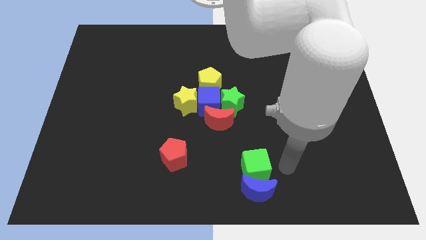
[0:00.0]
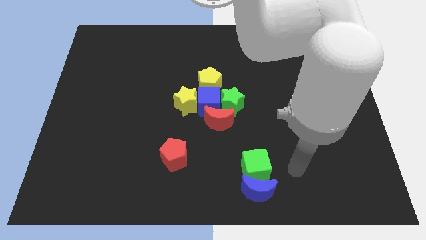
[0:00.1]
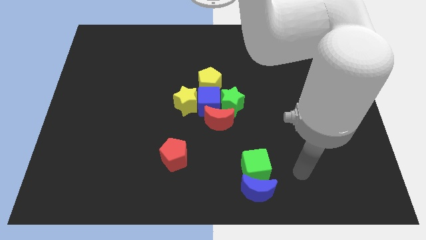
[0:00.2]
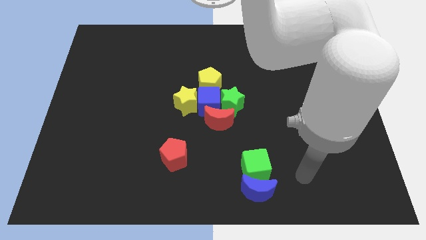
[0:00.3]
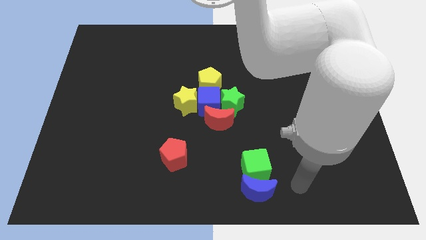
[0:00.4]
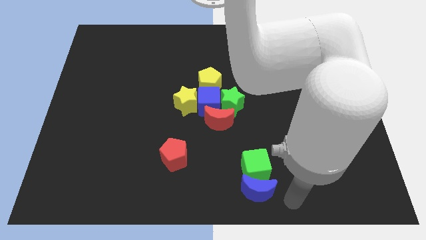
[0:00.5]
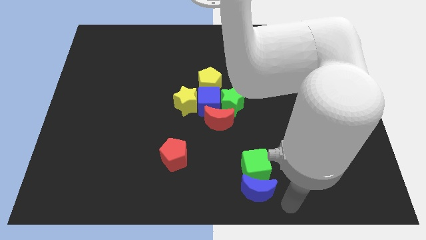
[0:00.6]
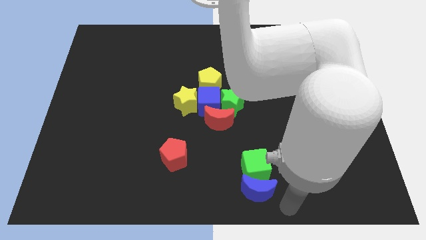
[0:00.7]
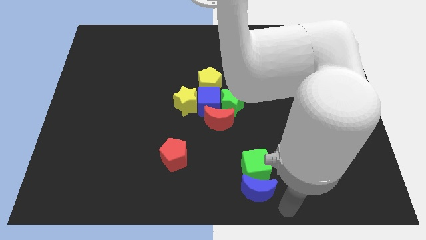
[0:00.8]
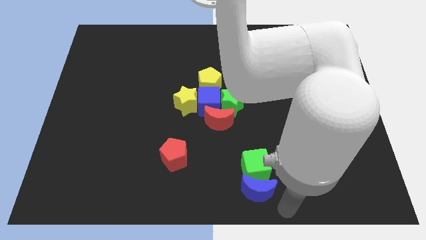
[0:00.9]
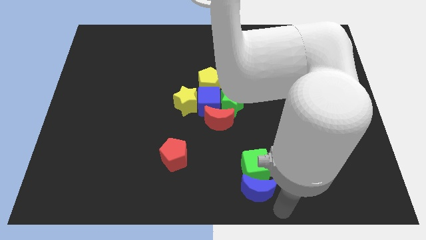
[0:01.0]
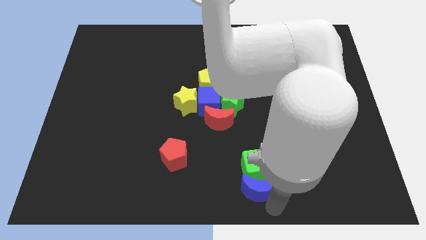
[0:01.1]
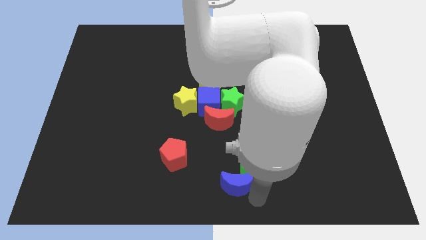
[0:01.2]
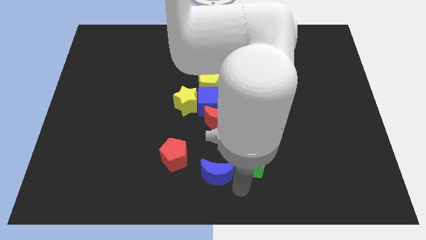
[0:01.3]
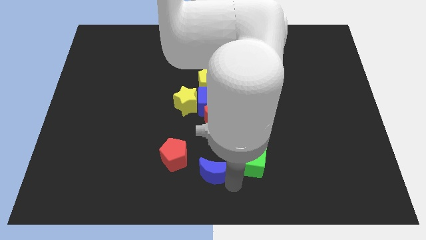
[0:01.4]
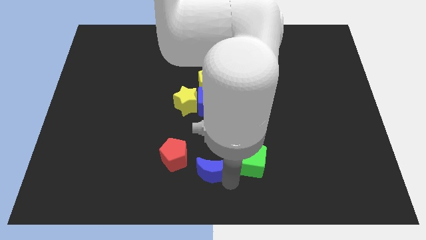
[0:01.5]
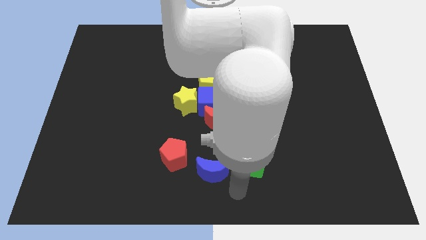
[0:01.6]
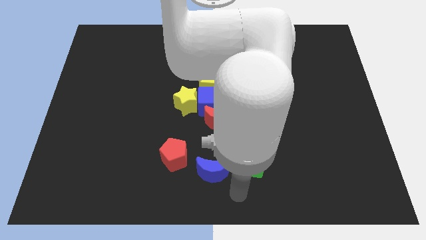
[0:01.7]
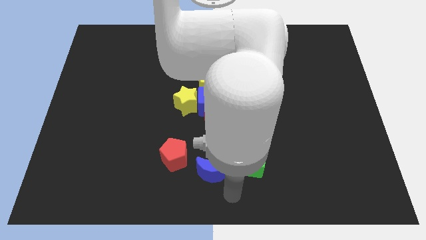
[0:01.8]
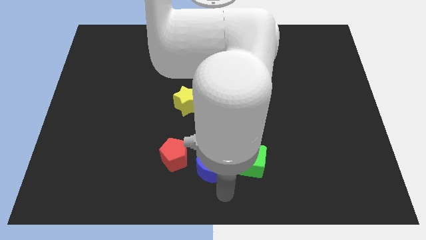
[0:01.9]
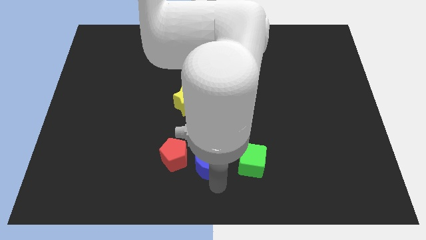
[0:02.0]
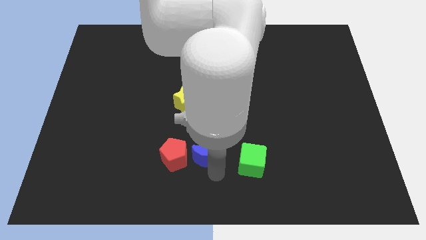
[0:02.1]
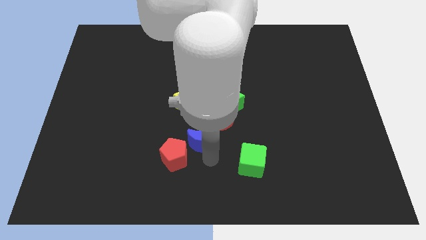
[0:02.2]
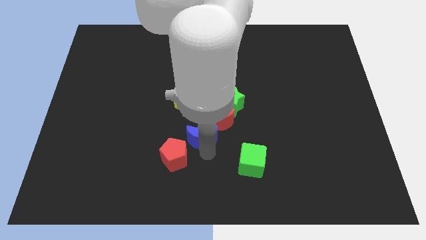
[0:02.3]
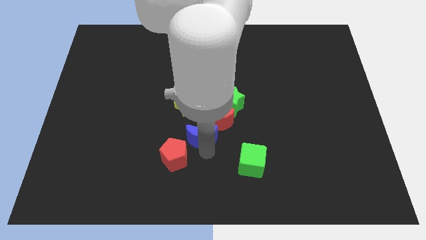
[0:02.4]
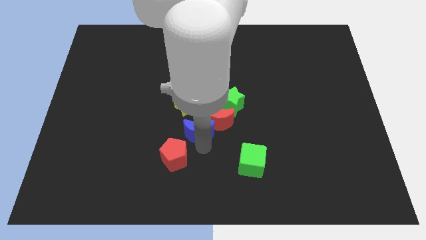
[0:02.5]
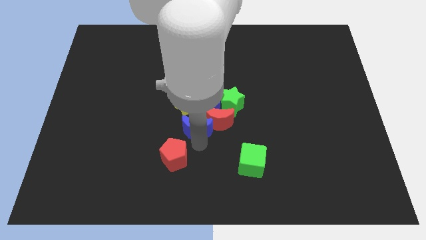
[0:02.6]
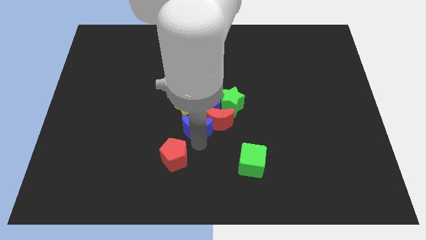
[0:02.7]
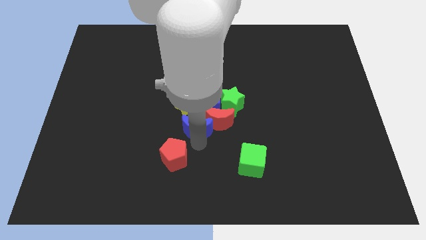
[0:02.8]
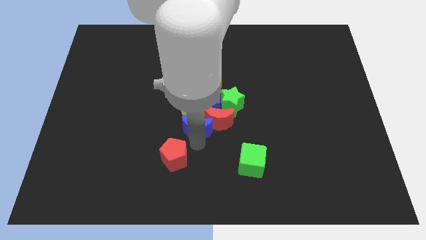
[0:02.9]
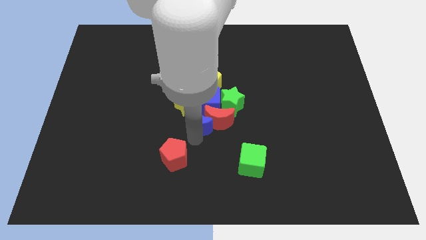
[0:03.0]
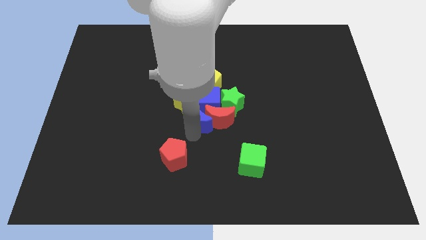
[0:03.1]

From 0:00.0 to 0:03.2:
move the blue moon at the bottom left side of the red moon

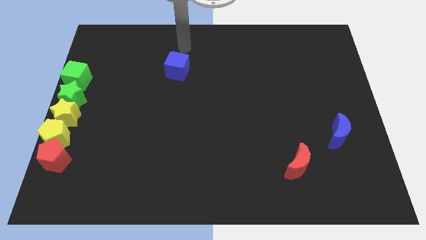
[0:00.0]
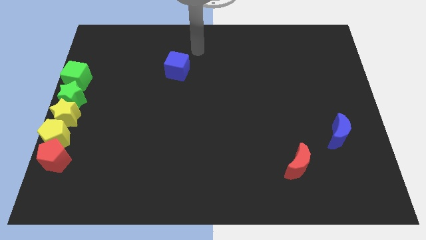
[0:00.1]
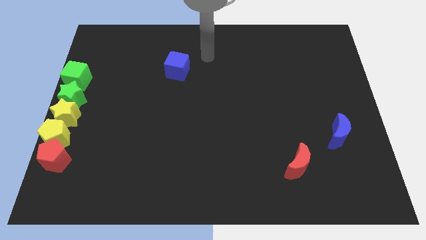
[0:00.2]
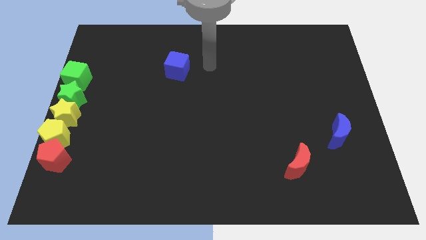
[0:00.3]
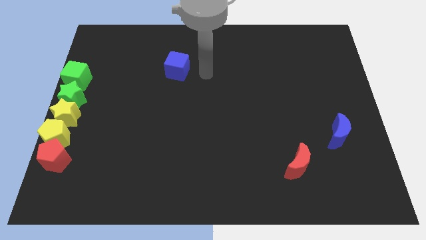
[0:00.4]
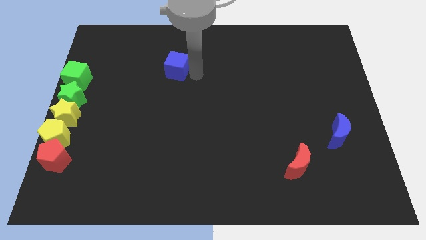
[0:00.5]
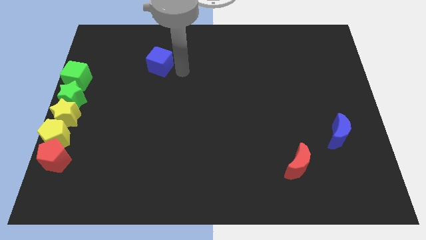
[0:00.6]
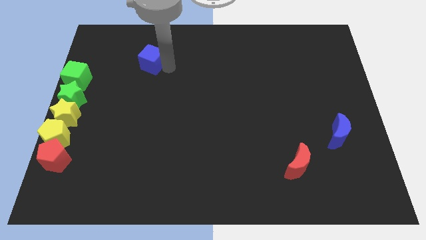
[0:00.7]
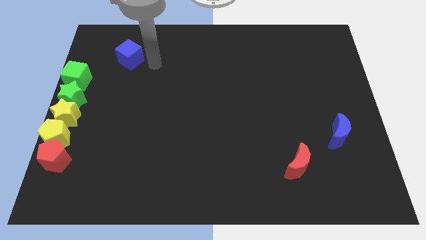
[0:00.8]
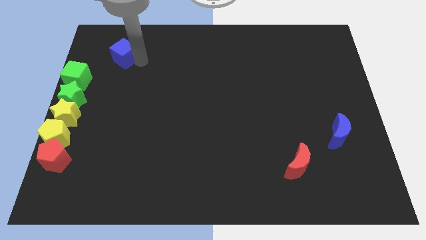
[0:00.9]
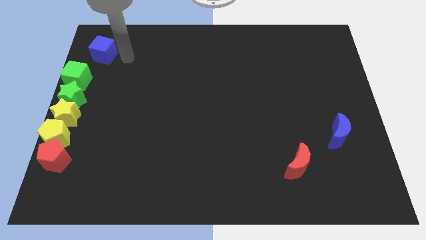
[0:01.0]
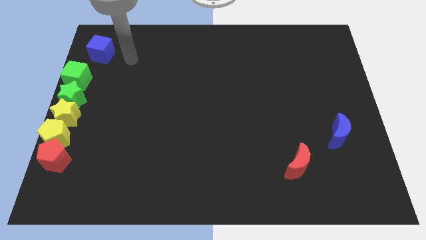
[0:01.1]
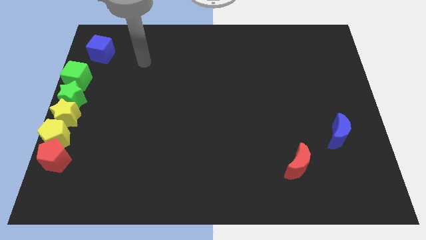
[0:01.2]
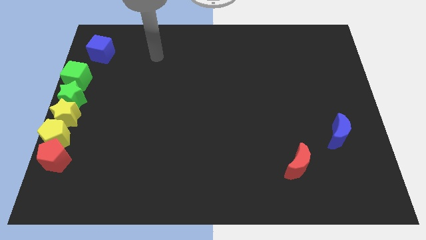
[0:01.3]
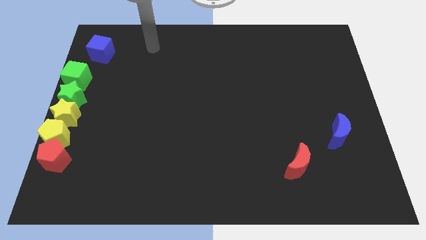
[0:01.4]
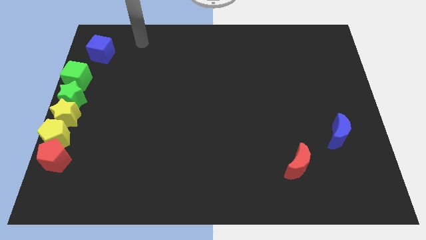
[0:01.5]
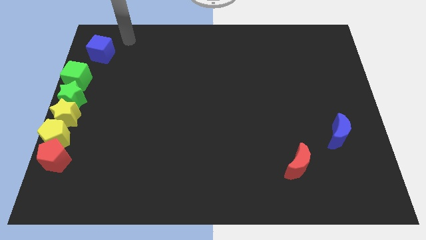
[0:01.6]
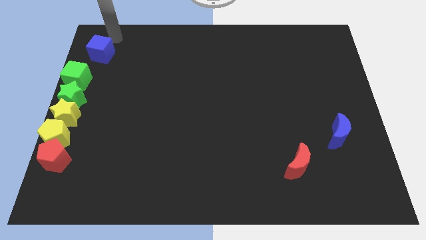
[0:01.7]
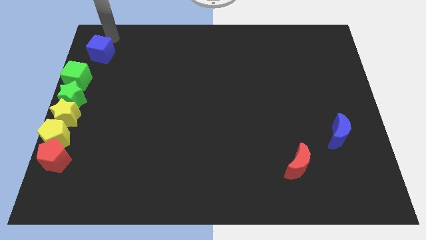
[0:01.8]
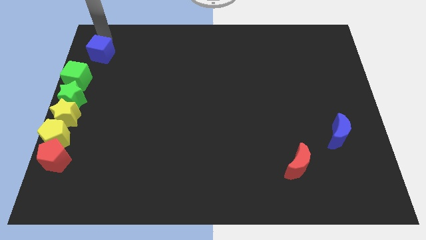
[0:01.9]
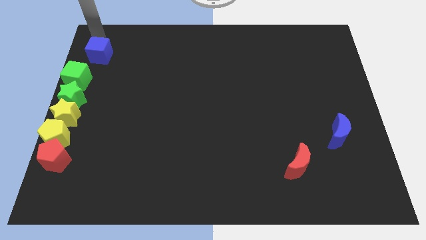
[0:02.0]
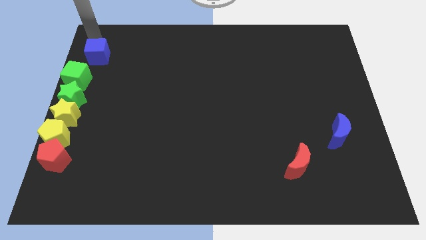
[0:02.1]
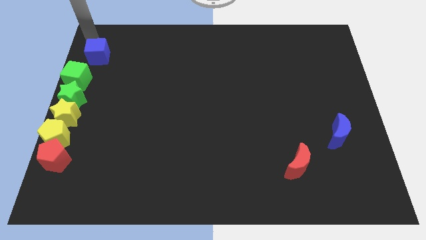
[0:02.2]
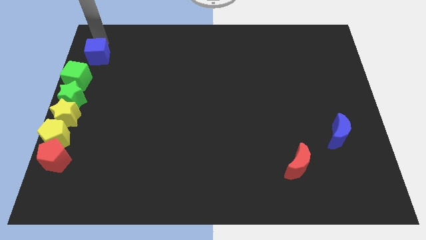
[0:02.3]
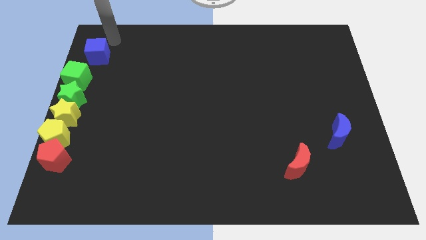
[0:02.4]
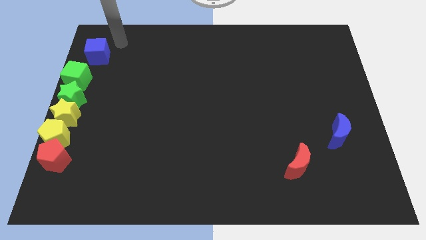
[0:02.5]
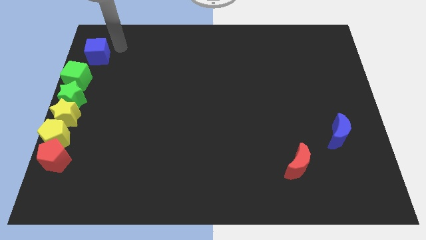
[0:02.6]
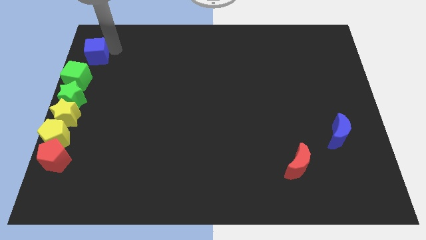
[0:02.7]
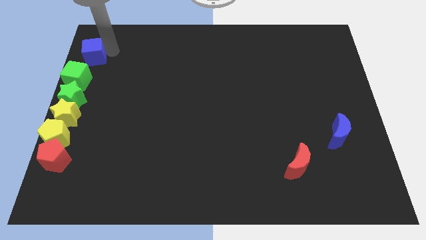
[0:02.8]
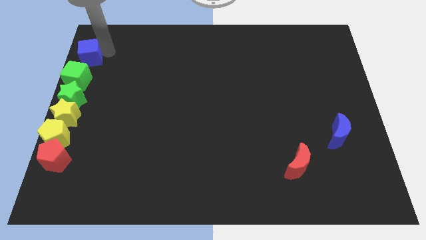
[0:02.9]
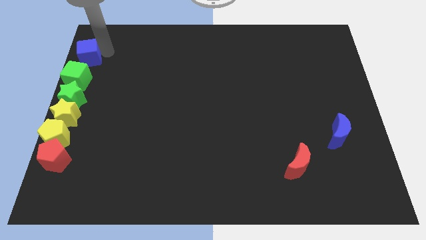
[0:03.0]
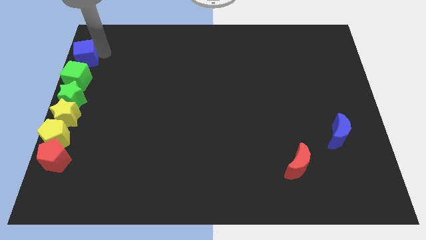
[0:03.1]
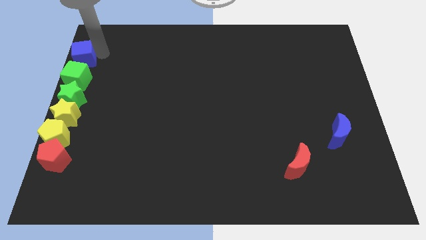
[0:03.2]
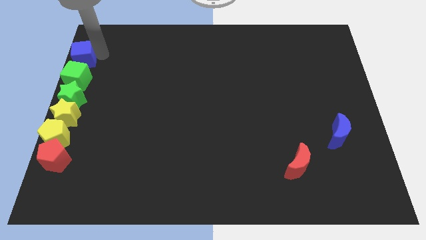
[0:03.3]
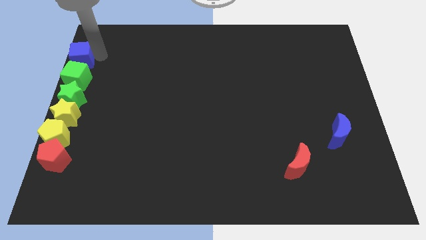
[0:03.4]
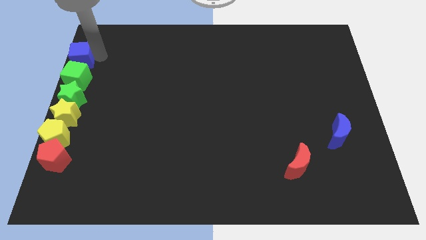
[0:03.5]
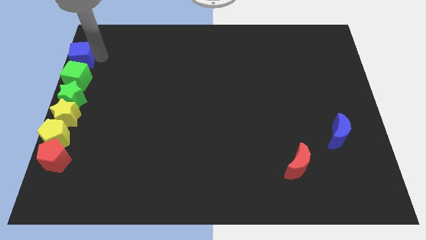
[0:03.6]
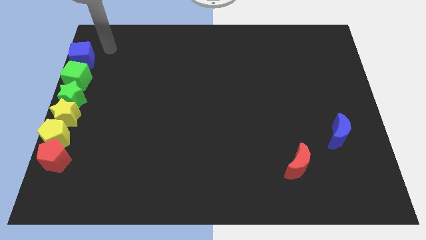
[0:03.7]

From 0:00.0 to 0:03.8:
move blue cube to the top of green cube

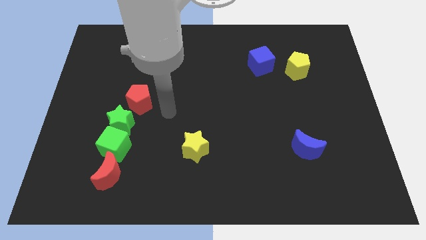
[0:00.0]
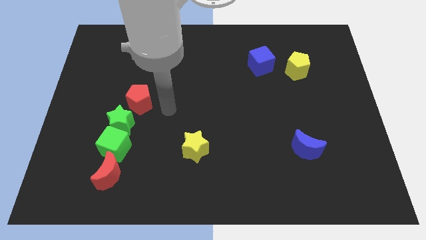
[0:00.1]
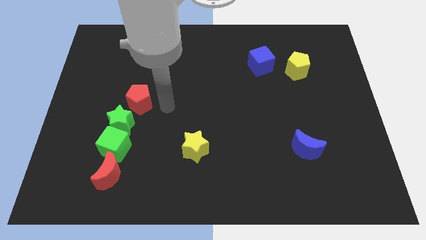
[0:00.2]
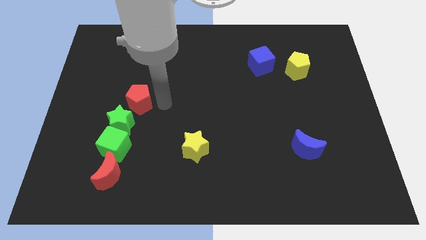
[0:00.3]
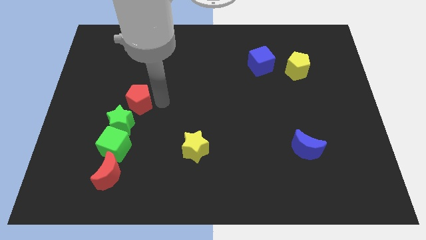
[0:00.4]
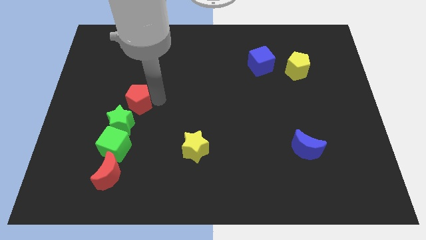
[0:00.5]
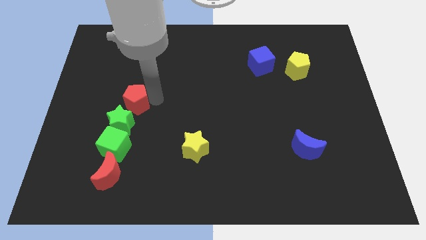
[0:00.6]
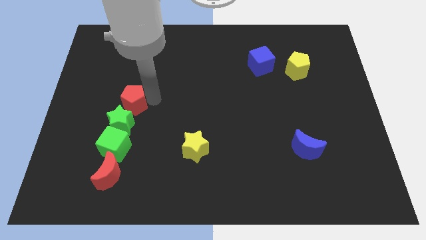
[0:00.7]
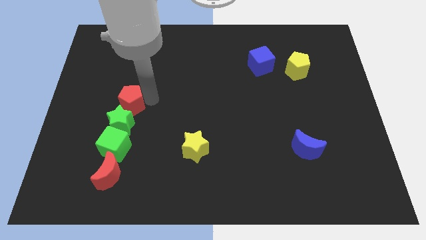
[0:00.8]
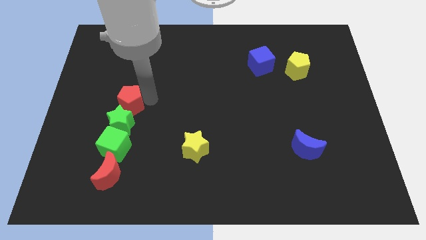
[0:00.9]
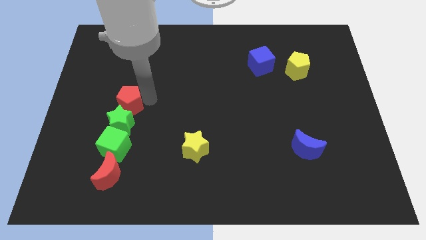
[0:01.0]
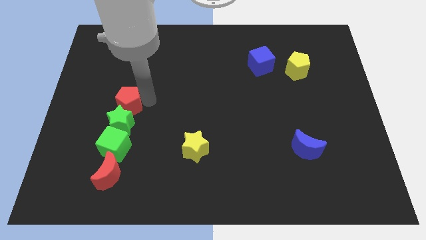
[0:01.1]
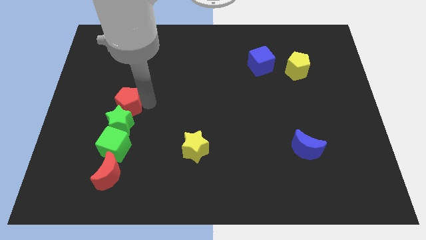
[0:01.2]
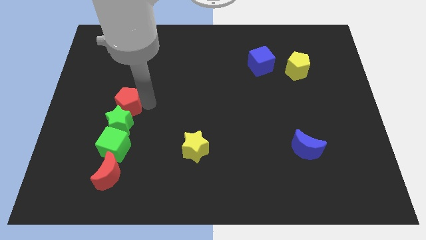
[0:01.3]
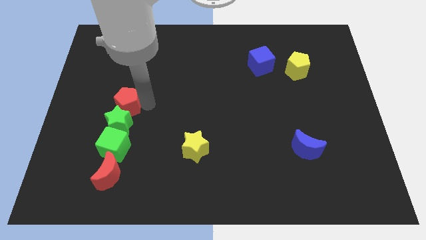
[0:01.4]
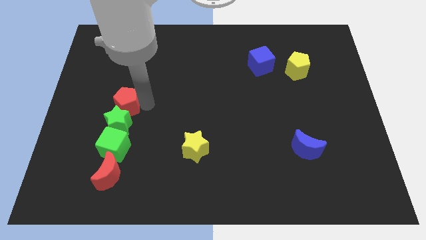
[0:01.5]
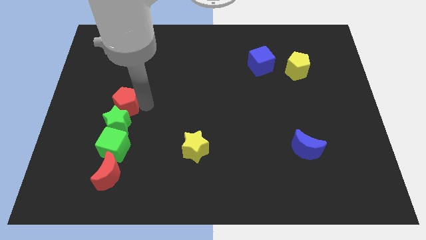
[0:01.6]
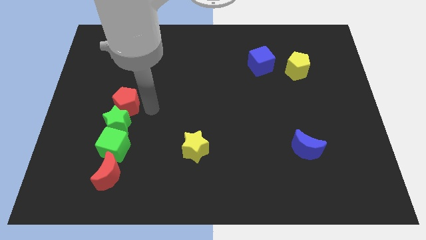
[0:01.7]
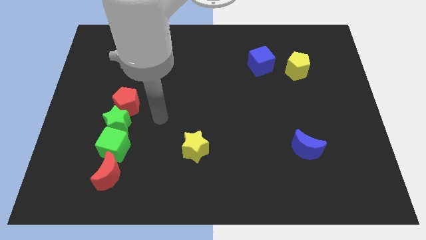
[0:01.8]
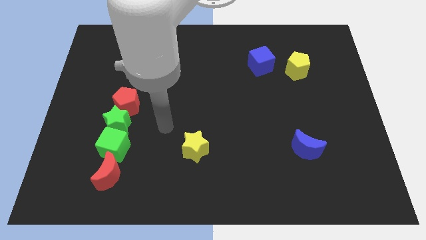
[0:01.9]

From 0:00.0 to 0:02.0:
push the red pentagon into the green star

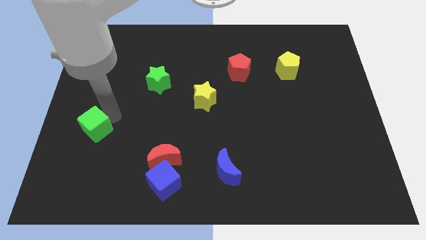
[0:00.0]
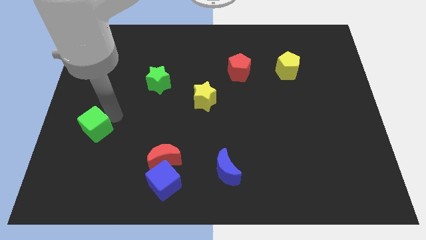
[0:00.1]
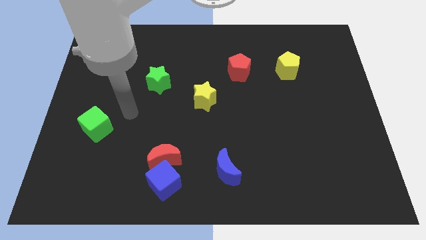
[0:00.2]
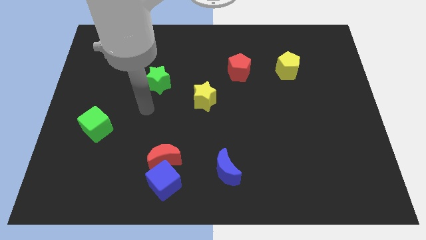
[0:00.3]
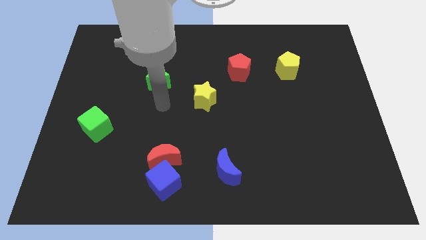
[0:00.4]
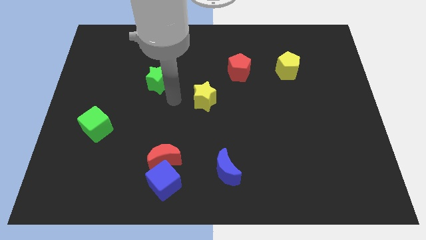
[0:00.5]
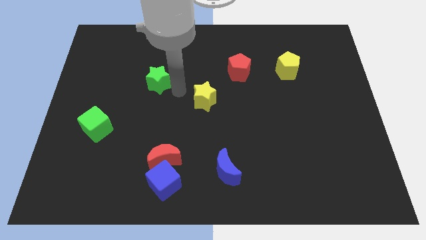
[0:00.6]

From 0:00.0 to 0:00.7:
place your arm in between the yellow and green stars
